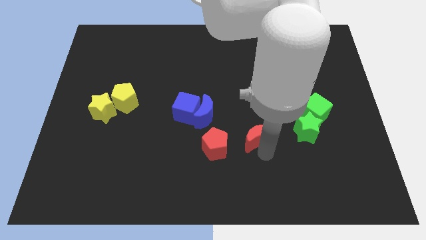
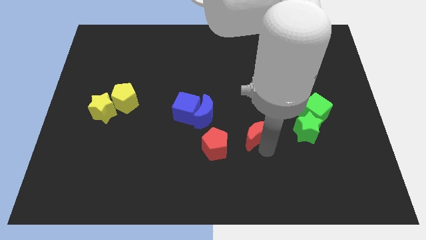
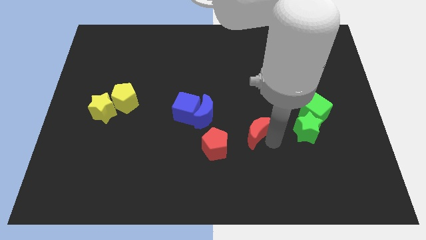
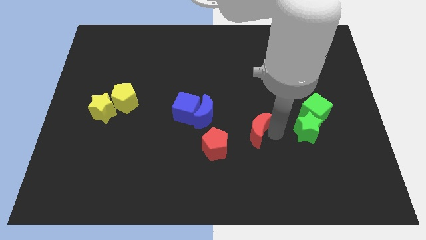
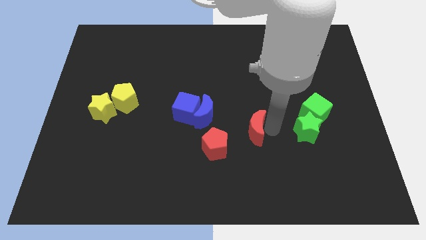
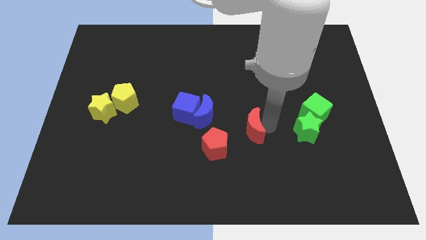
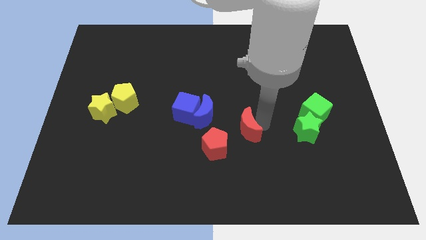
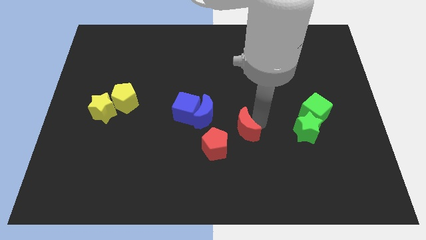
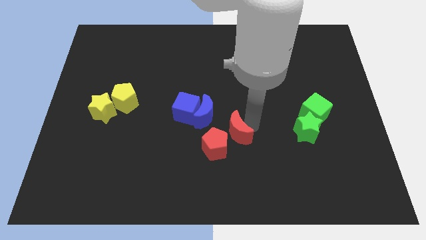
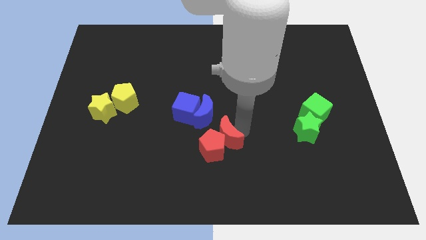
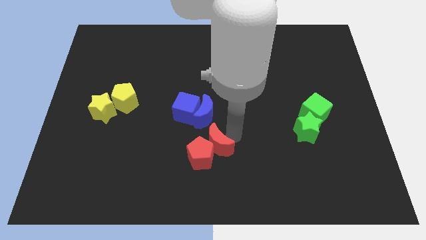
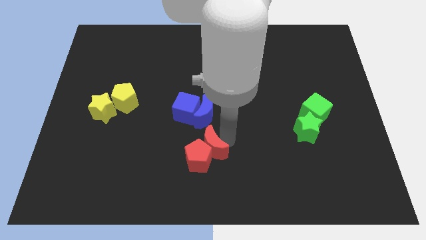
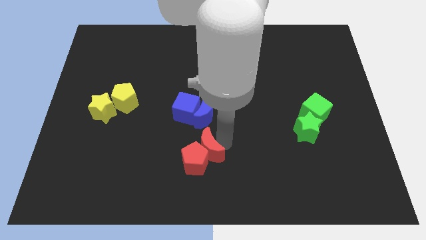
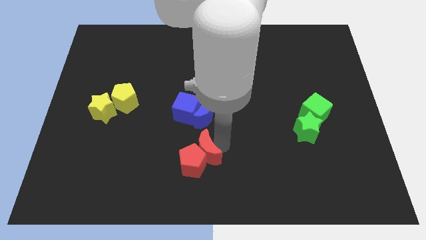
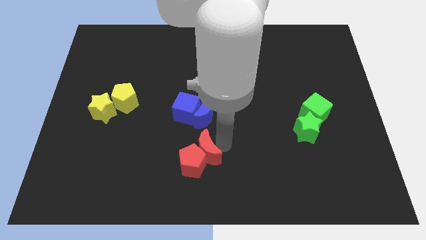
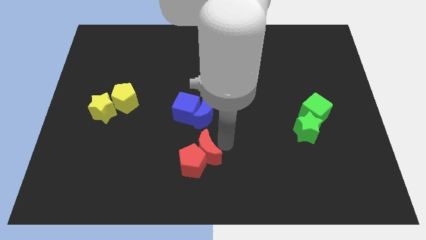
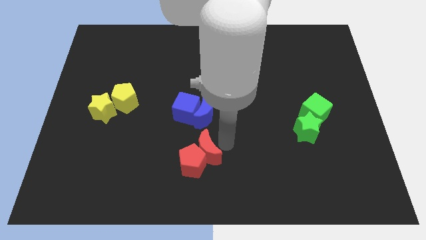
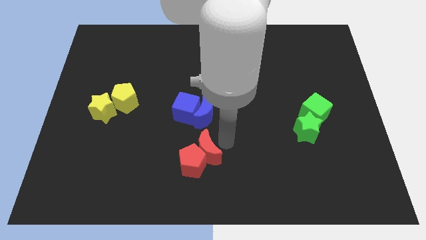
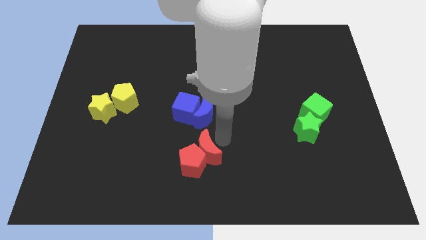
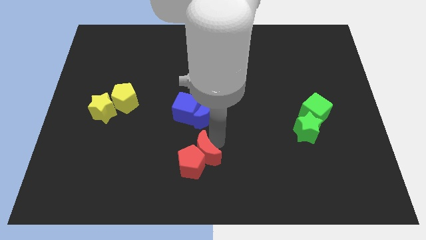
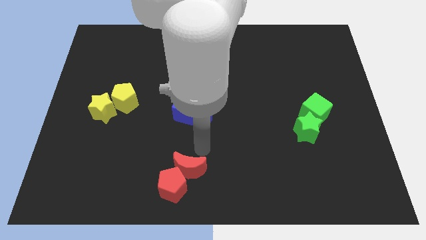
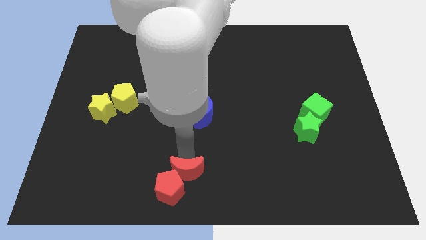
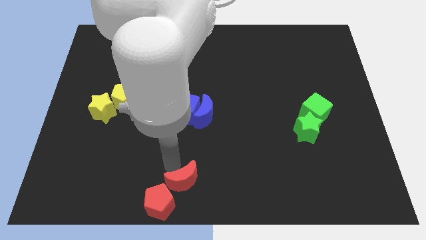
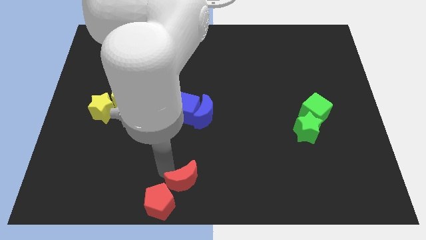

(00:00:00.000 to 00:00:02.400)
move the red blocks to the bottom

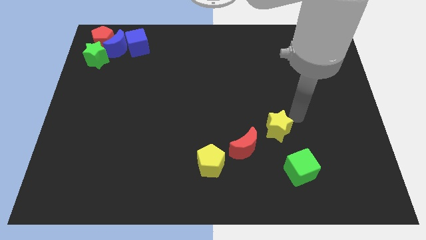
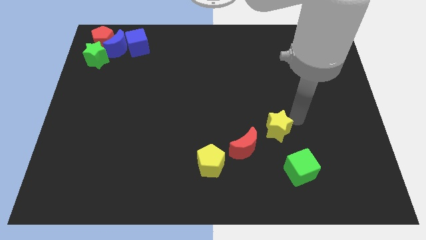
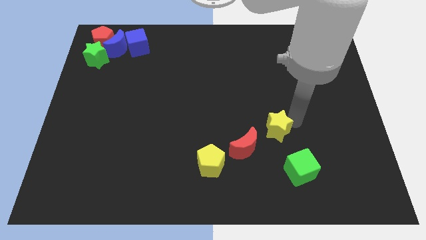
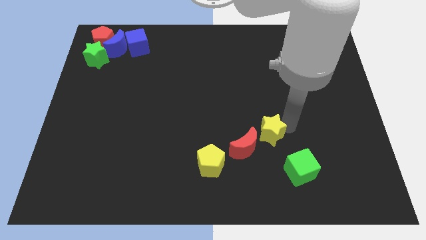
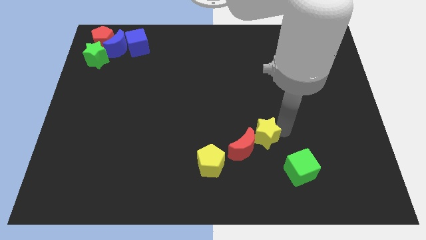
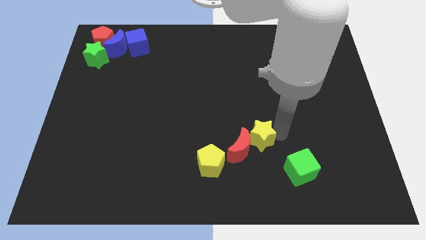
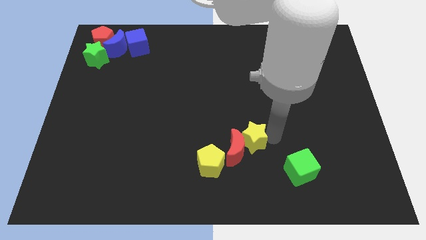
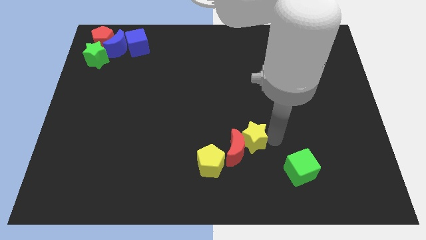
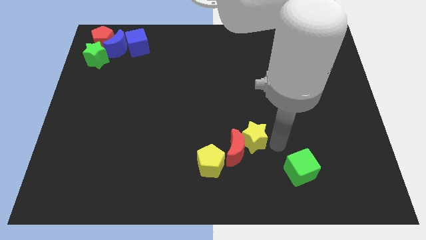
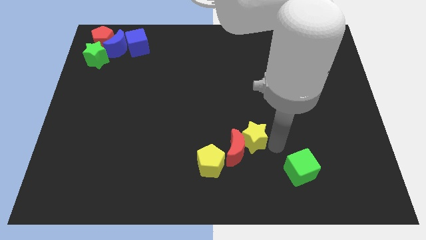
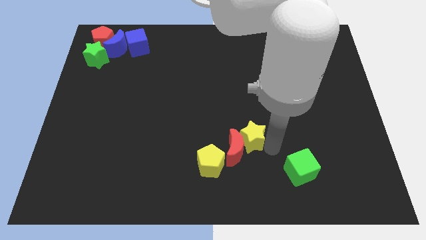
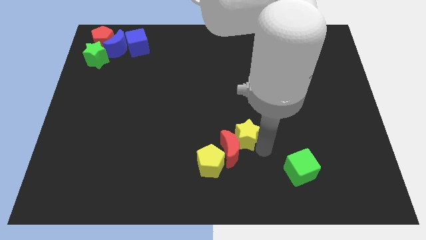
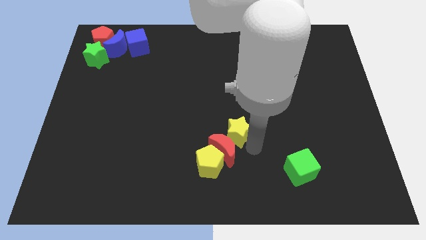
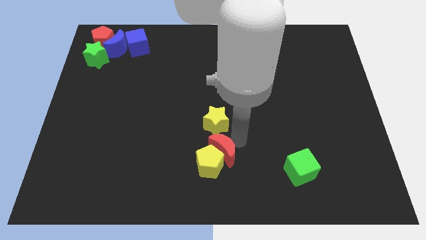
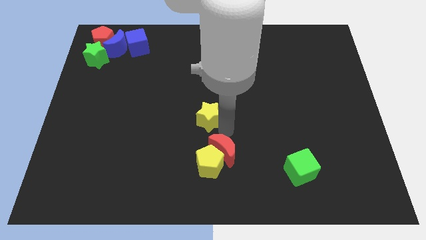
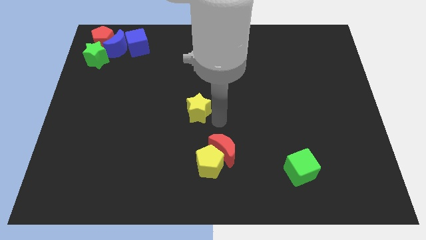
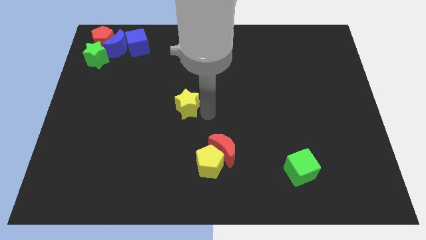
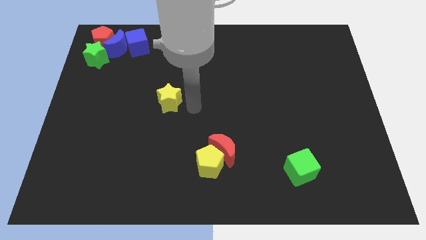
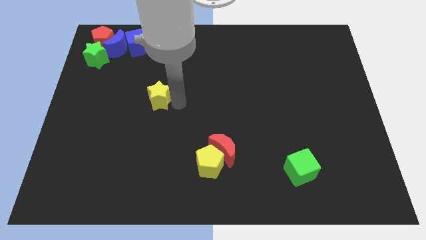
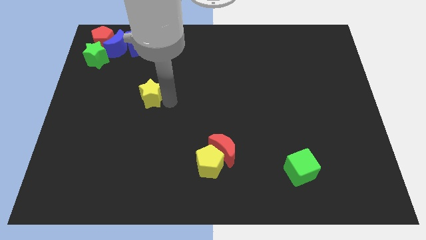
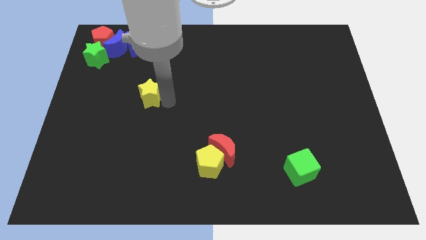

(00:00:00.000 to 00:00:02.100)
move the yellow star away from the red crescent

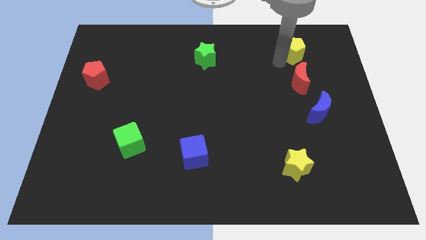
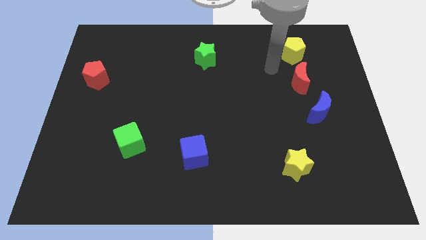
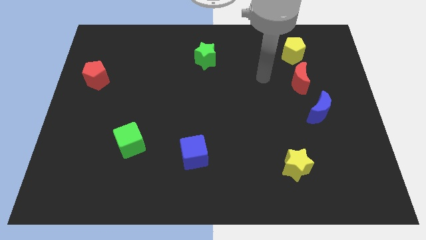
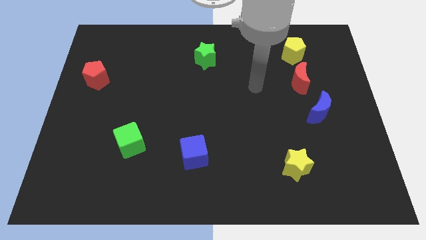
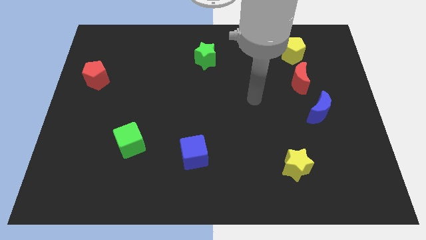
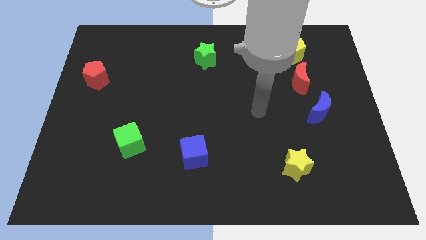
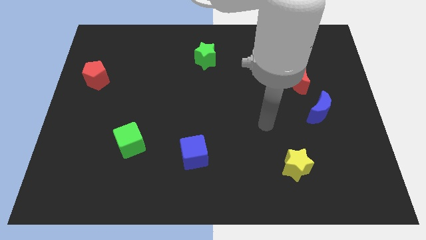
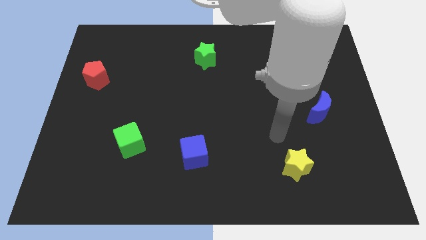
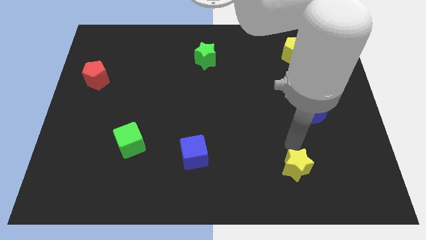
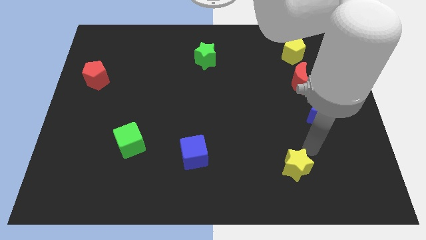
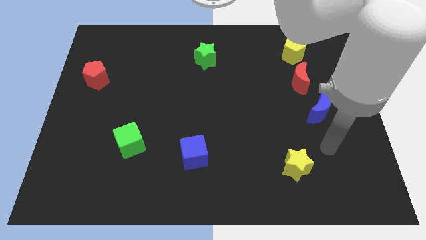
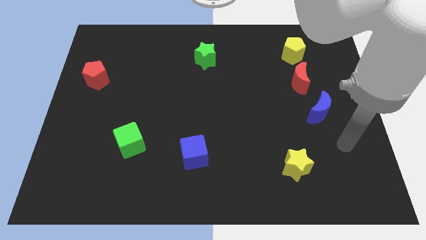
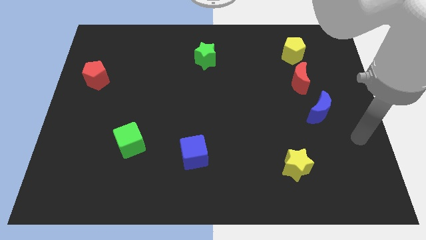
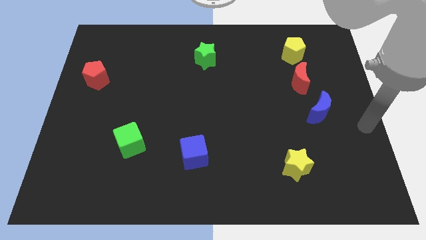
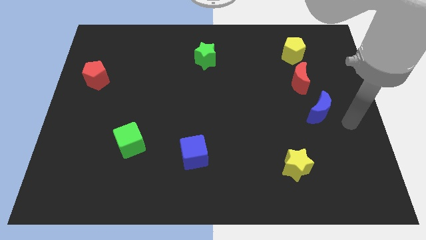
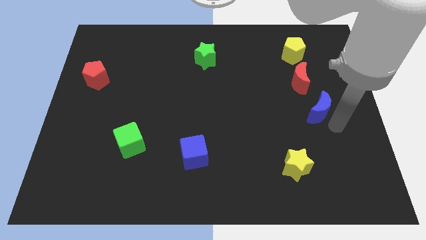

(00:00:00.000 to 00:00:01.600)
move the arm away from the yellow pentagon

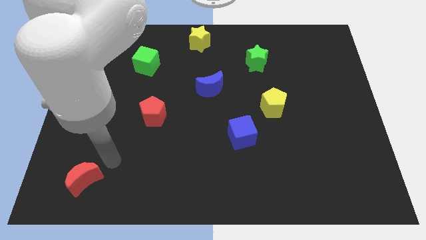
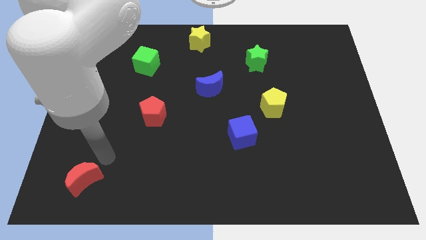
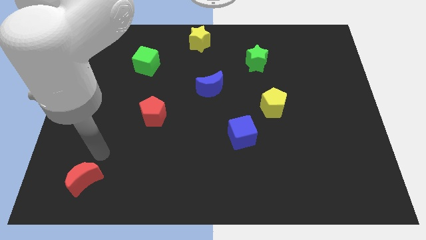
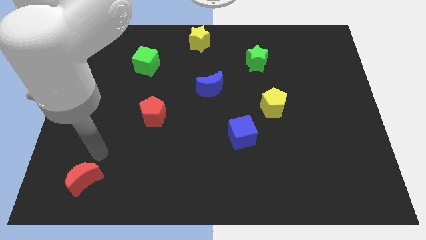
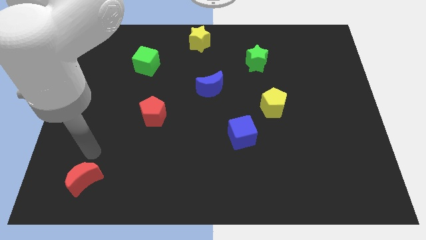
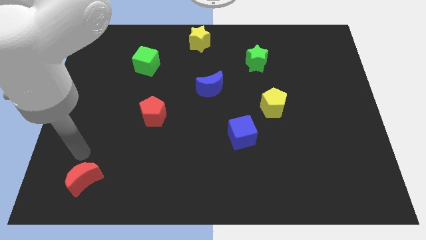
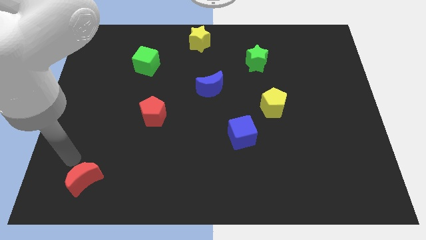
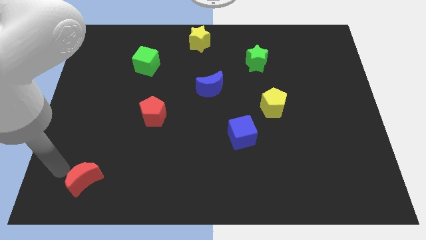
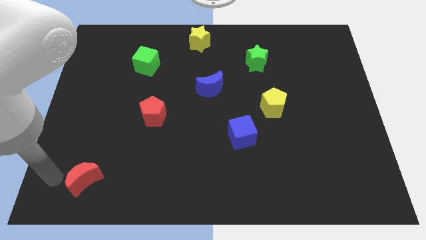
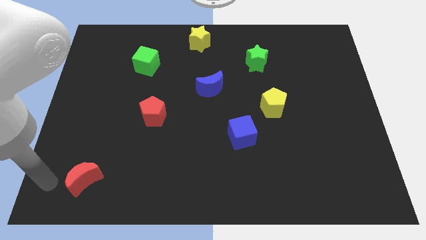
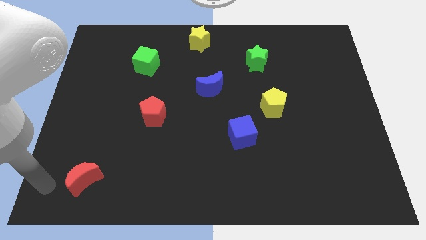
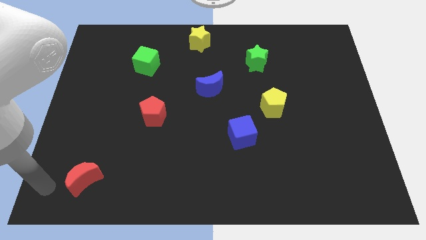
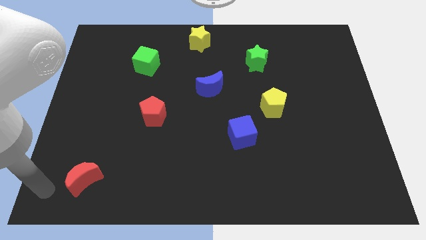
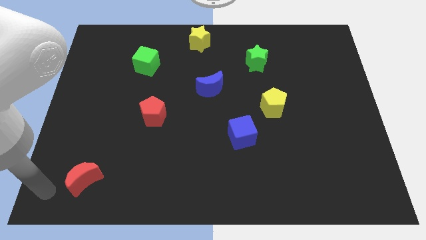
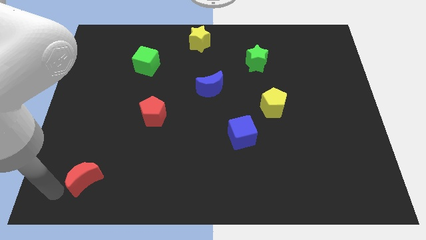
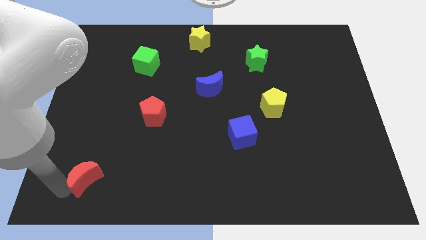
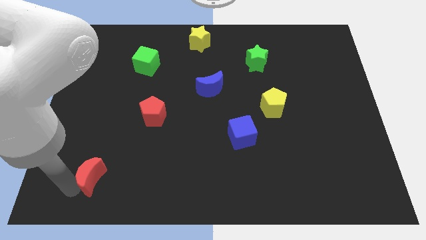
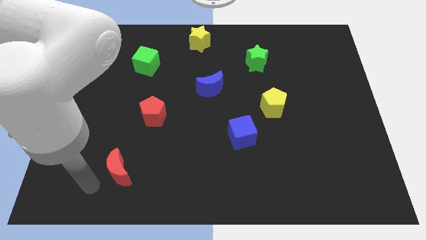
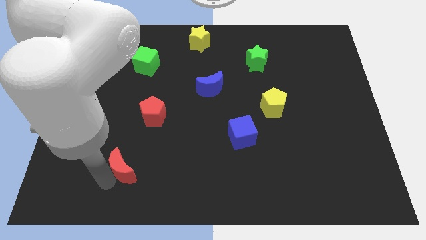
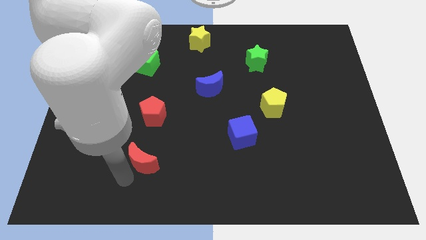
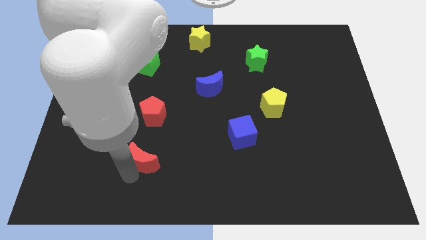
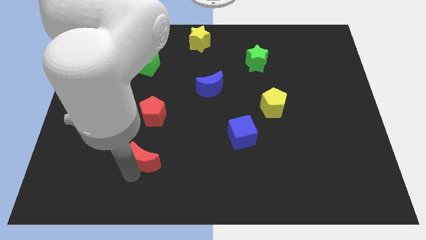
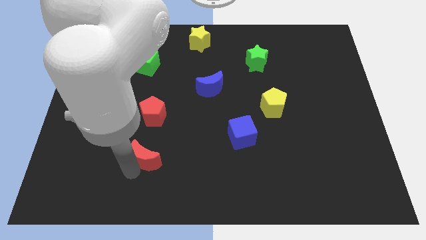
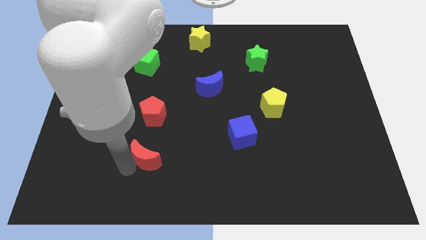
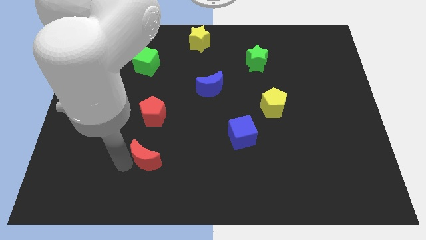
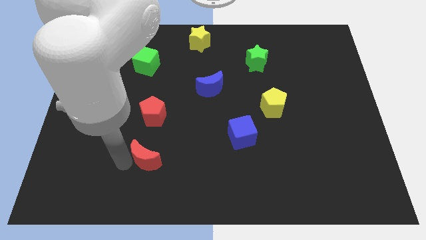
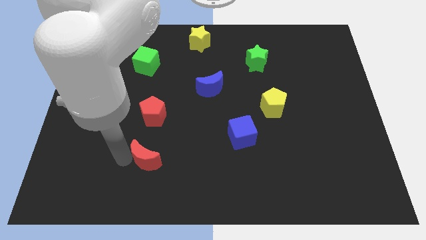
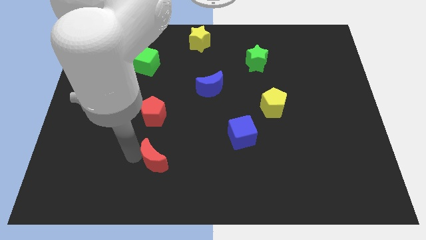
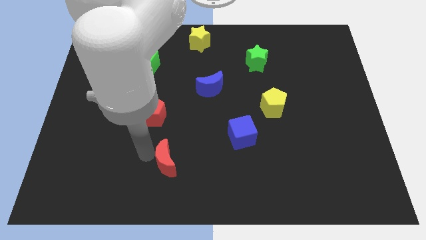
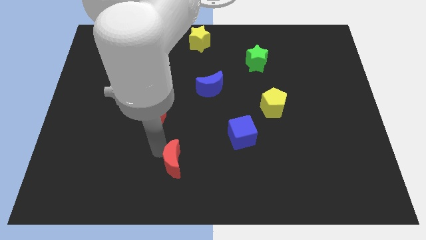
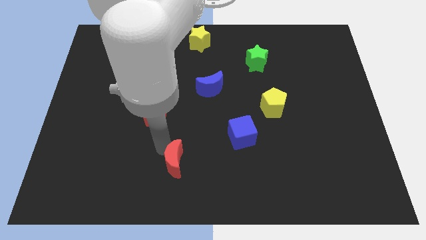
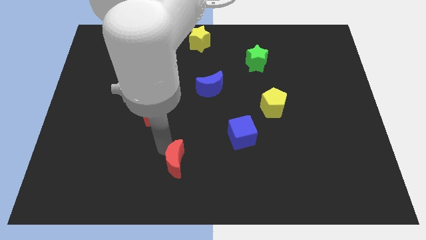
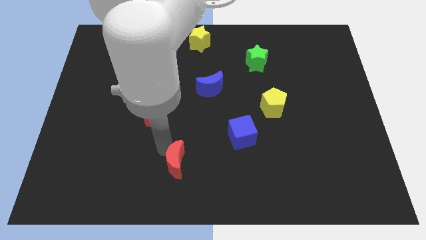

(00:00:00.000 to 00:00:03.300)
push the red crescent towards the right side of the board
